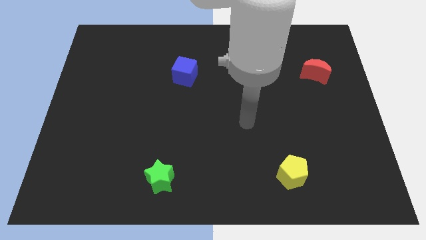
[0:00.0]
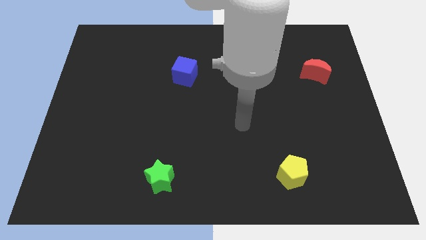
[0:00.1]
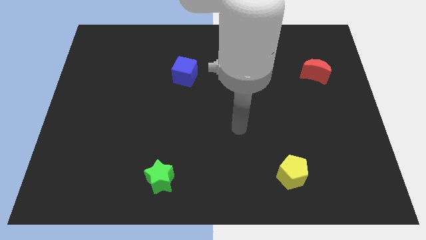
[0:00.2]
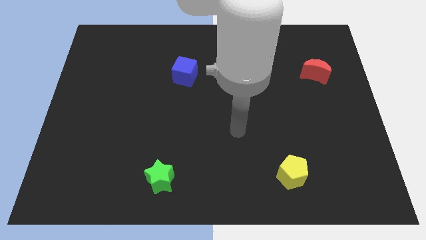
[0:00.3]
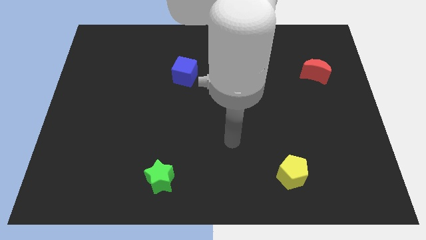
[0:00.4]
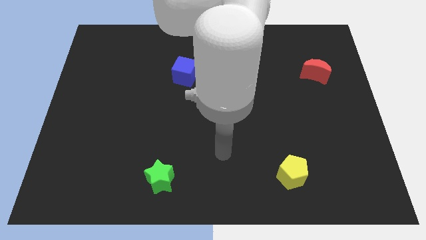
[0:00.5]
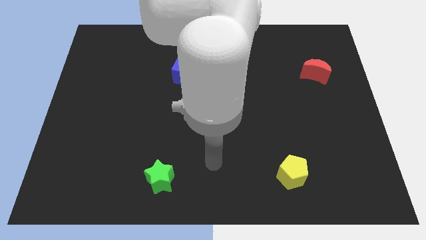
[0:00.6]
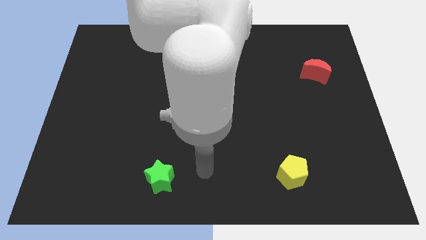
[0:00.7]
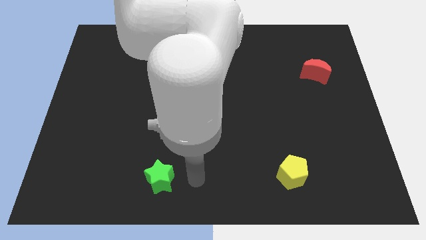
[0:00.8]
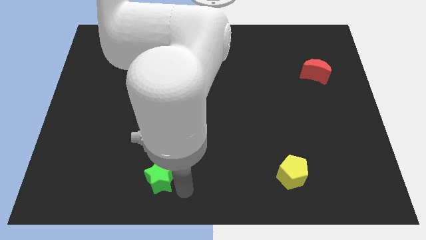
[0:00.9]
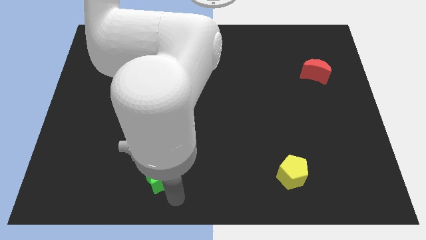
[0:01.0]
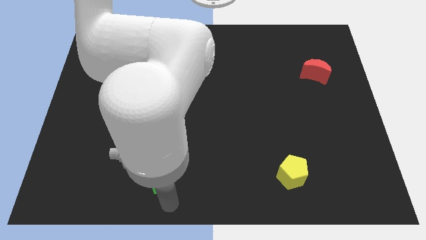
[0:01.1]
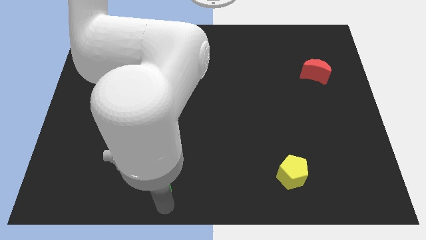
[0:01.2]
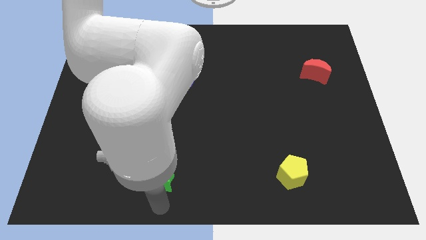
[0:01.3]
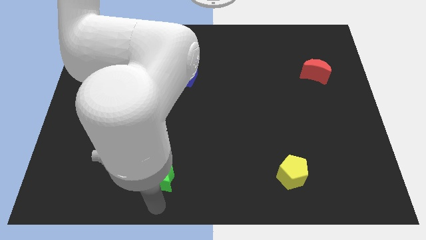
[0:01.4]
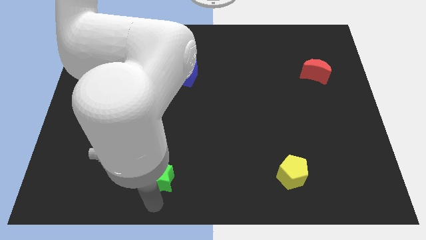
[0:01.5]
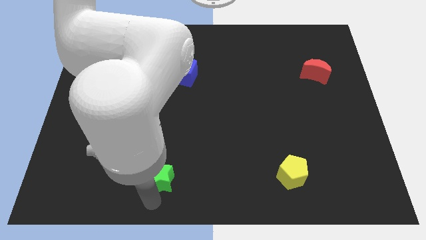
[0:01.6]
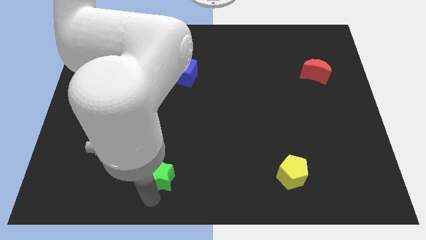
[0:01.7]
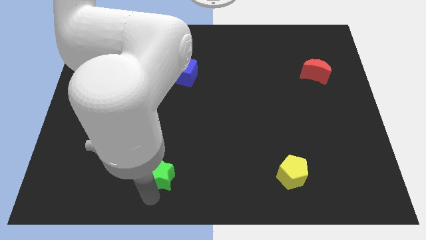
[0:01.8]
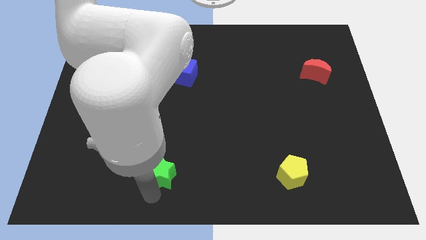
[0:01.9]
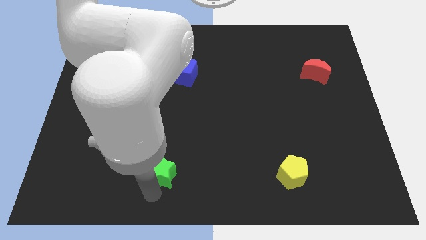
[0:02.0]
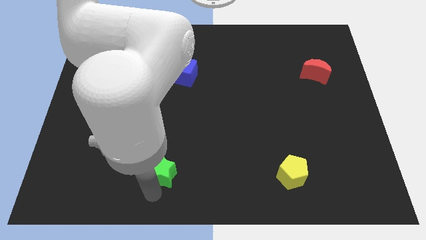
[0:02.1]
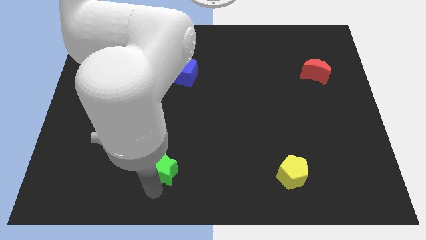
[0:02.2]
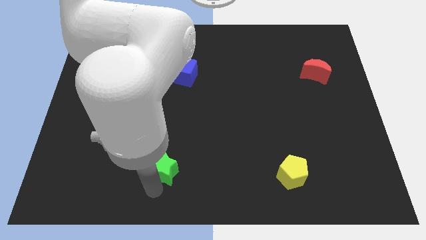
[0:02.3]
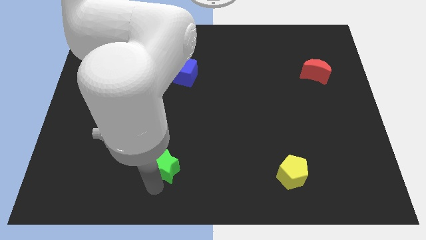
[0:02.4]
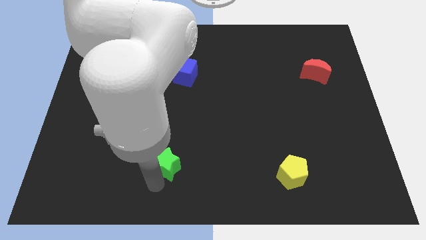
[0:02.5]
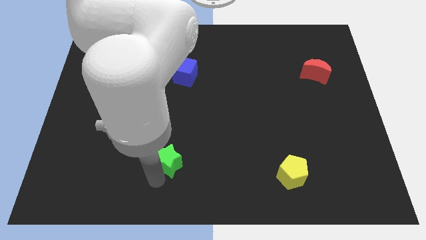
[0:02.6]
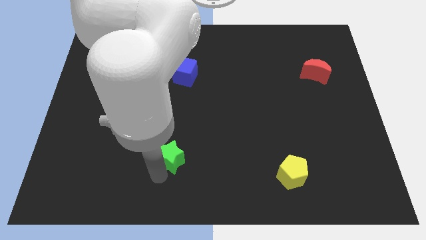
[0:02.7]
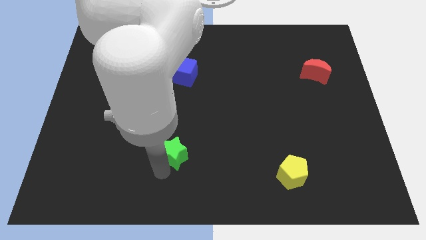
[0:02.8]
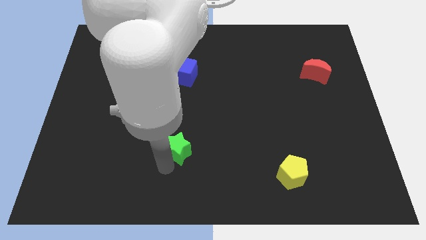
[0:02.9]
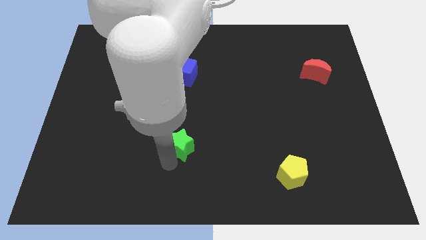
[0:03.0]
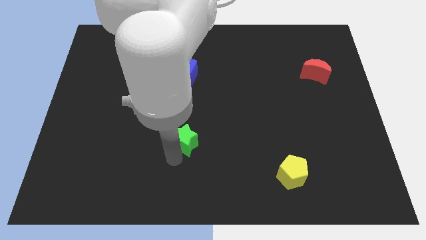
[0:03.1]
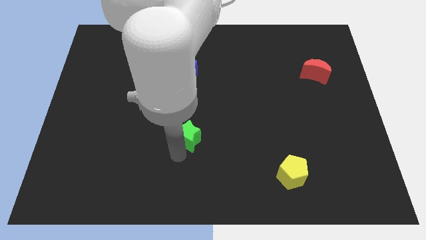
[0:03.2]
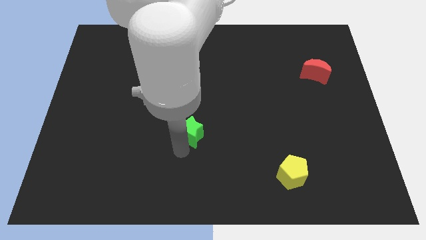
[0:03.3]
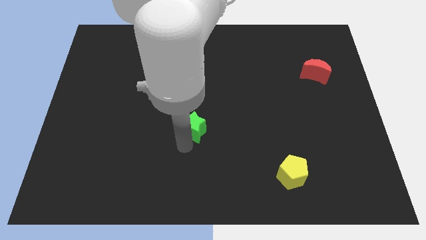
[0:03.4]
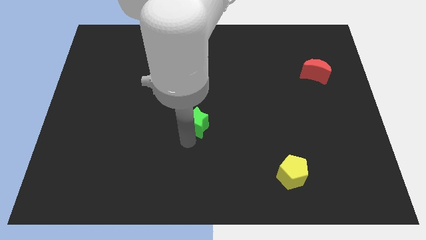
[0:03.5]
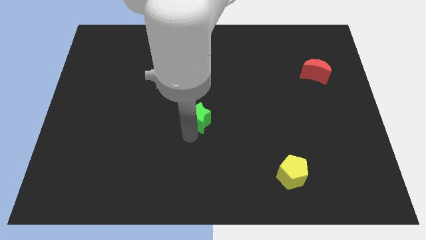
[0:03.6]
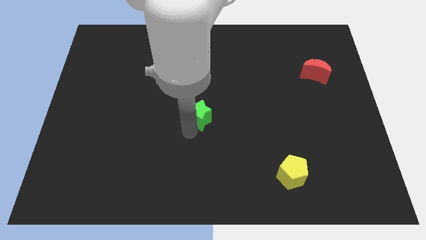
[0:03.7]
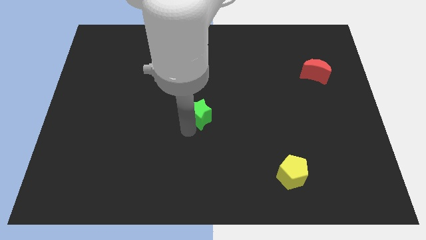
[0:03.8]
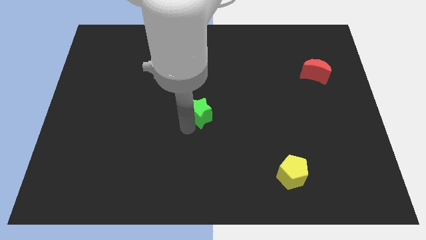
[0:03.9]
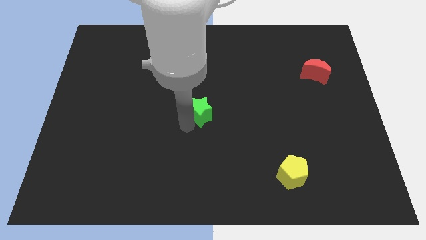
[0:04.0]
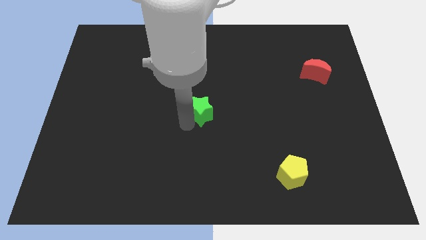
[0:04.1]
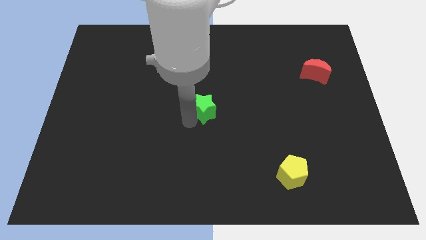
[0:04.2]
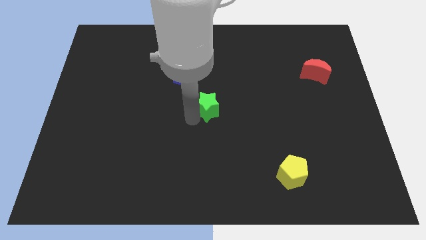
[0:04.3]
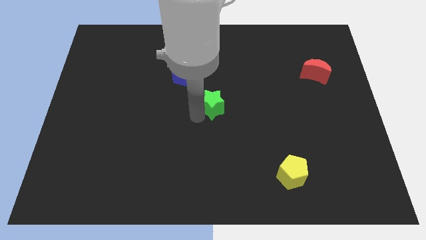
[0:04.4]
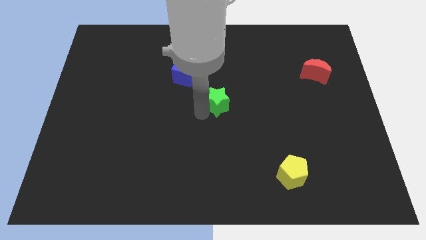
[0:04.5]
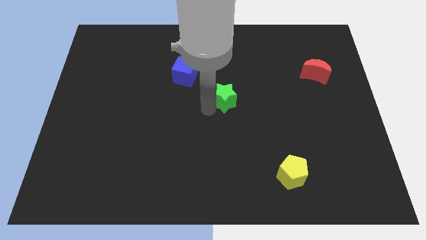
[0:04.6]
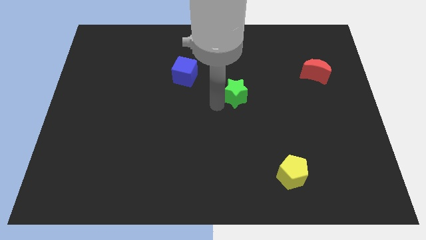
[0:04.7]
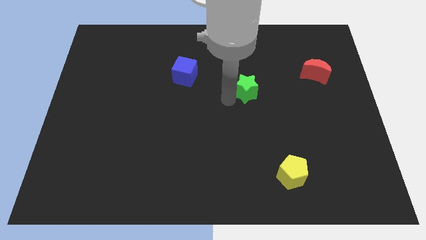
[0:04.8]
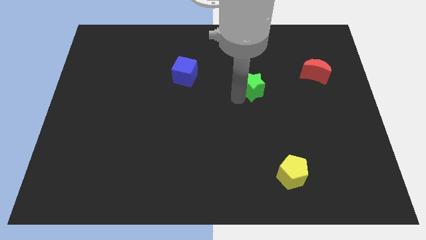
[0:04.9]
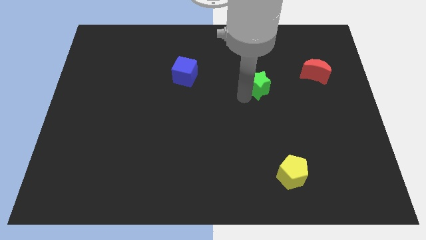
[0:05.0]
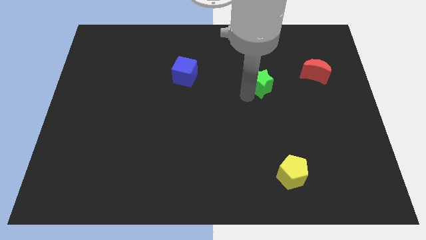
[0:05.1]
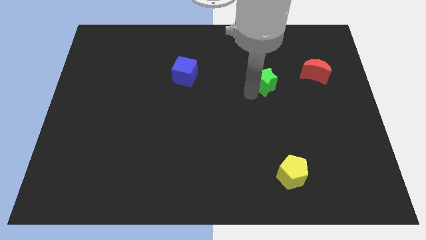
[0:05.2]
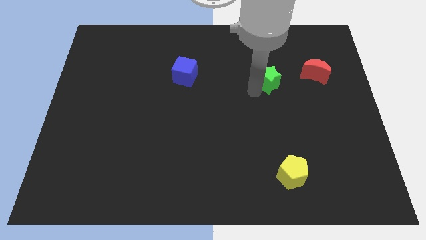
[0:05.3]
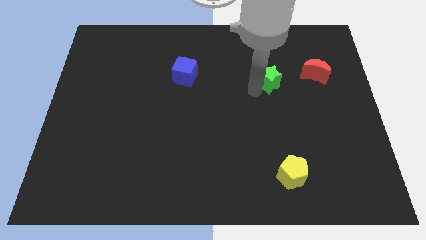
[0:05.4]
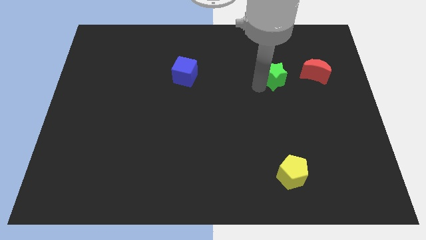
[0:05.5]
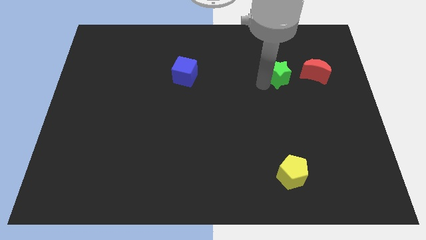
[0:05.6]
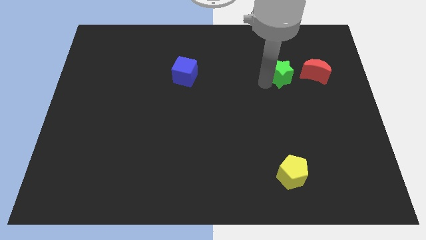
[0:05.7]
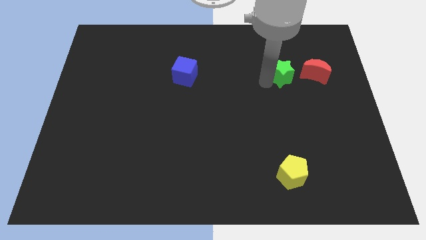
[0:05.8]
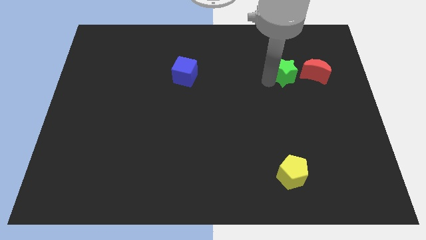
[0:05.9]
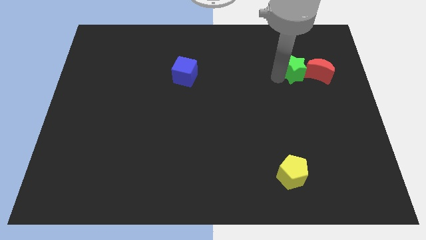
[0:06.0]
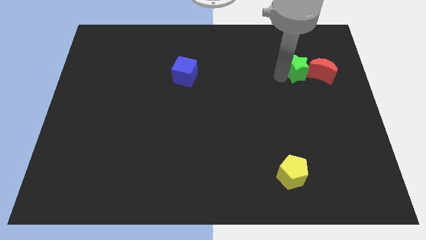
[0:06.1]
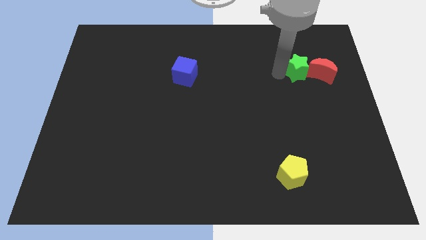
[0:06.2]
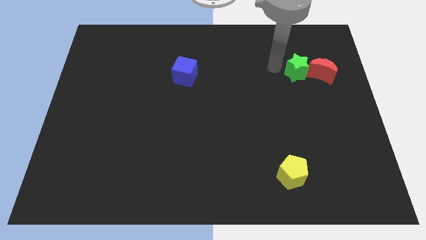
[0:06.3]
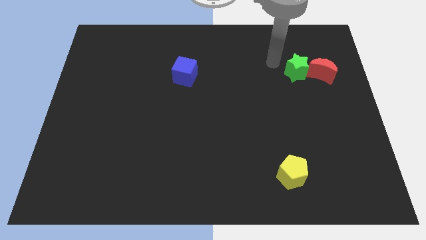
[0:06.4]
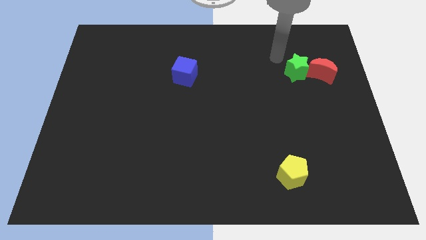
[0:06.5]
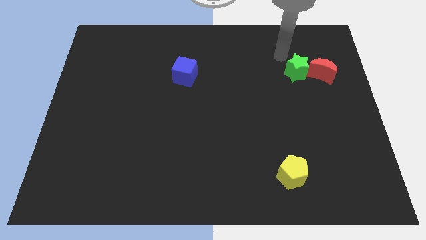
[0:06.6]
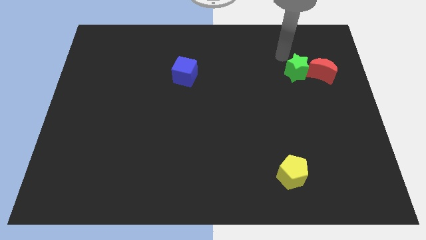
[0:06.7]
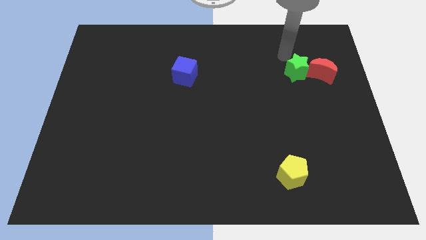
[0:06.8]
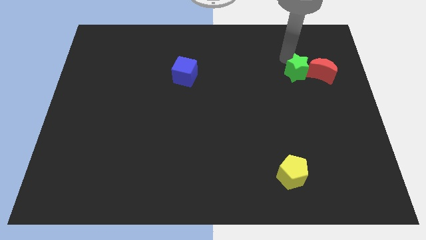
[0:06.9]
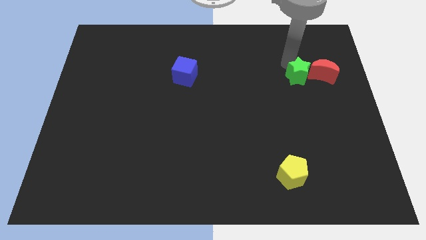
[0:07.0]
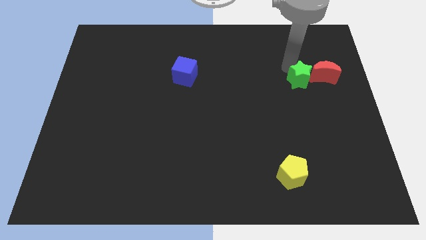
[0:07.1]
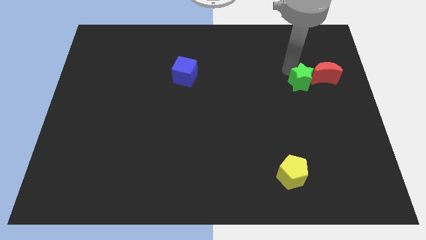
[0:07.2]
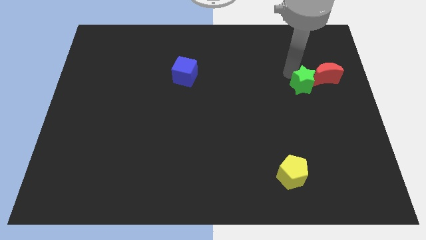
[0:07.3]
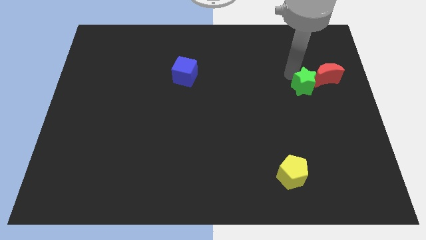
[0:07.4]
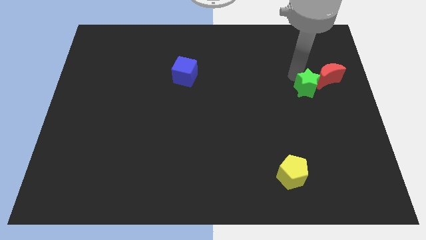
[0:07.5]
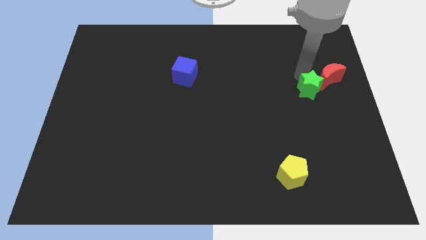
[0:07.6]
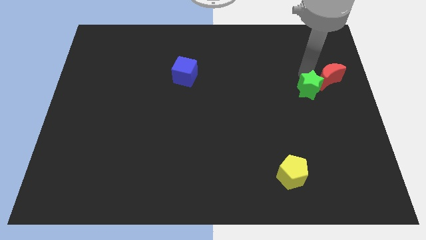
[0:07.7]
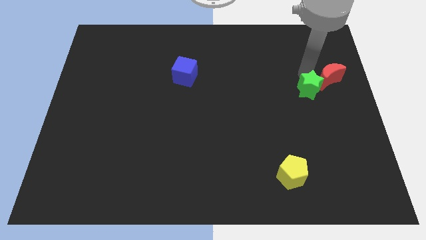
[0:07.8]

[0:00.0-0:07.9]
slide the green star next to the red moon

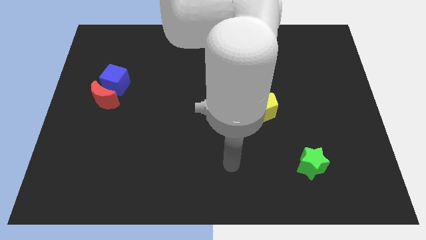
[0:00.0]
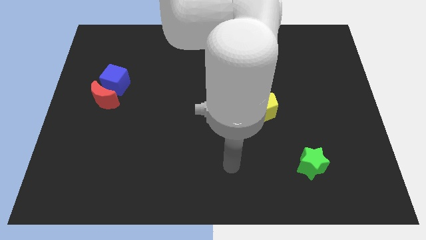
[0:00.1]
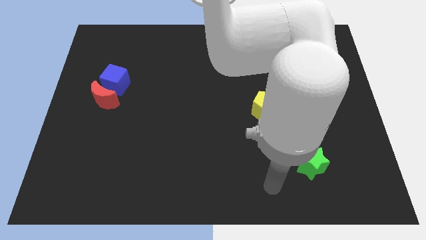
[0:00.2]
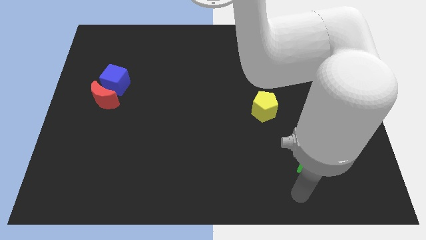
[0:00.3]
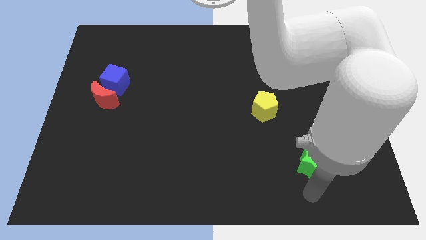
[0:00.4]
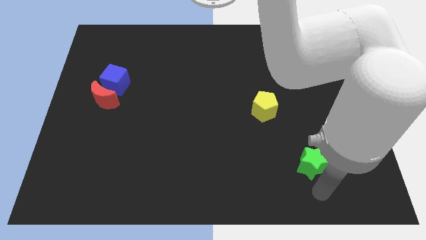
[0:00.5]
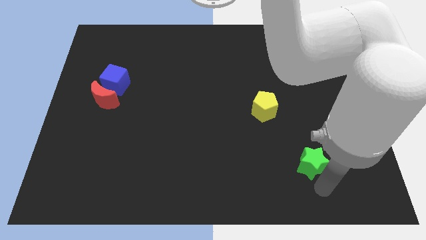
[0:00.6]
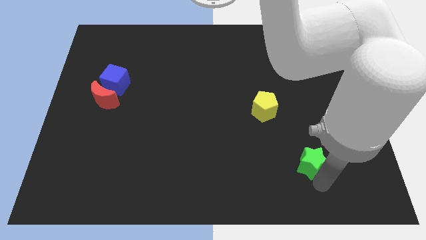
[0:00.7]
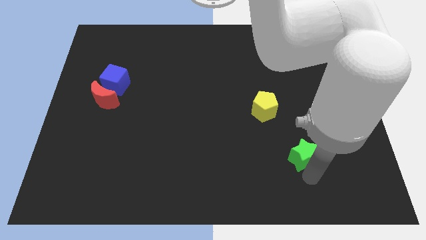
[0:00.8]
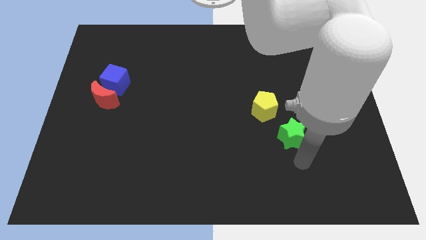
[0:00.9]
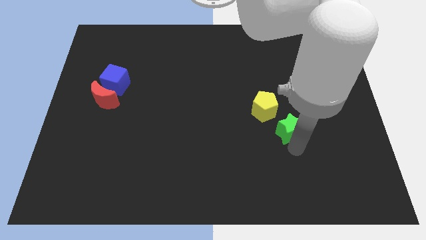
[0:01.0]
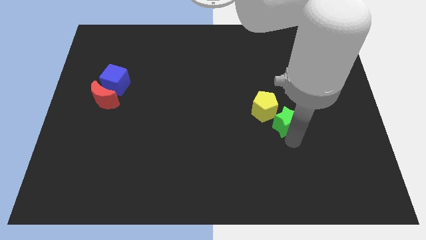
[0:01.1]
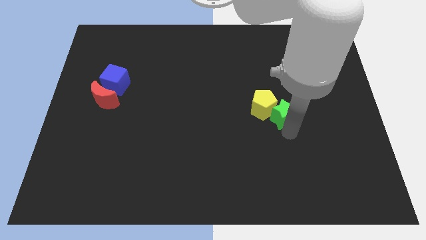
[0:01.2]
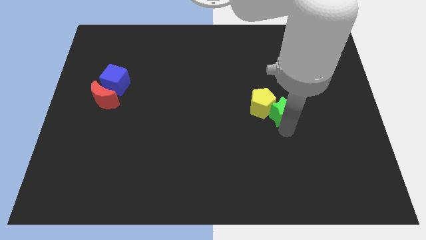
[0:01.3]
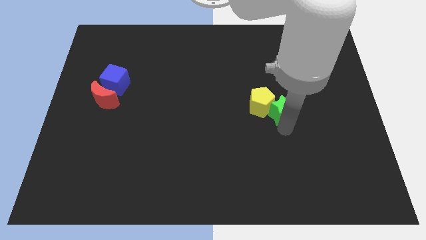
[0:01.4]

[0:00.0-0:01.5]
push the star close to the yellow pentagon
